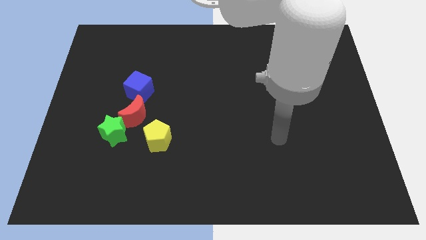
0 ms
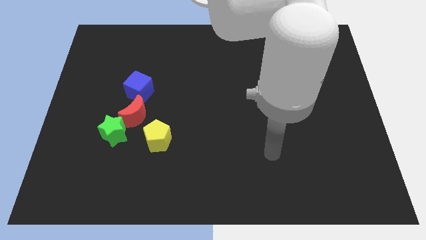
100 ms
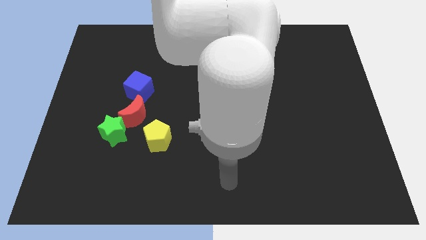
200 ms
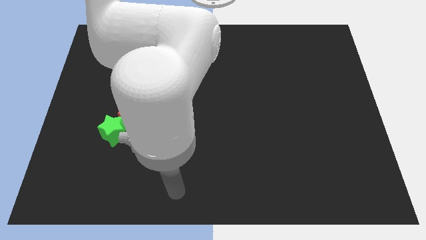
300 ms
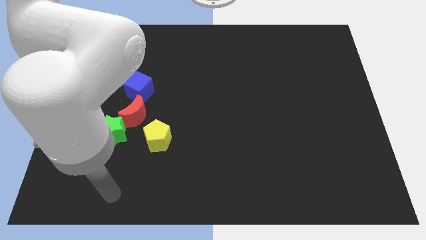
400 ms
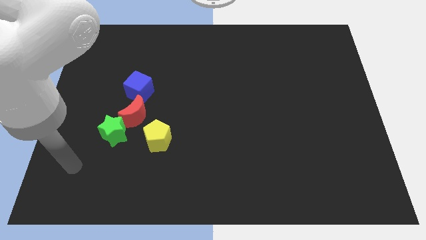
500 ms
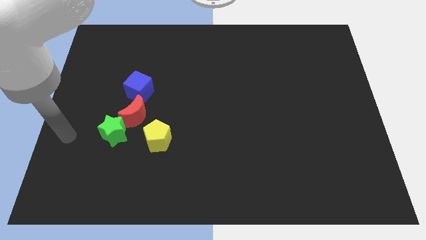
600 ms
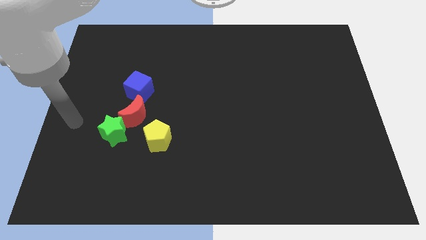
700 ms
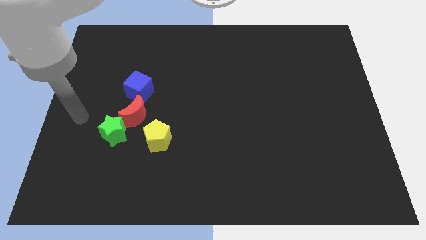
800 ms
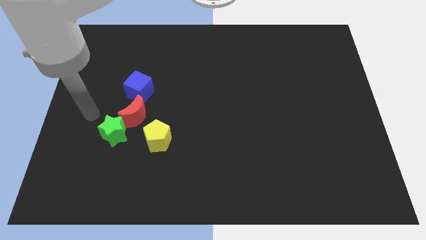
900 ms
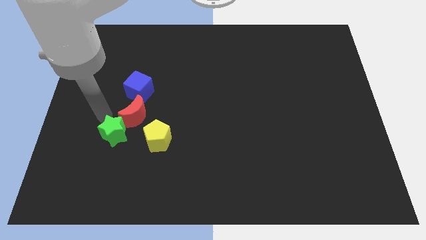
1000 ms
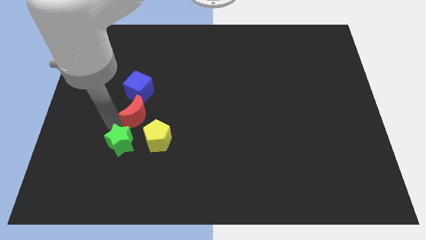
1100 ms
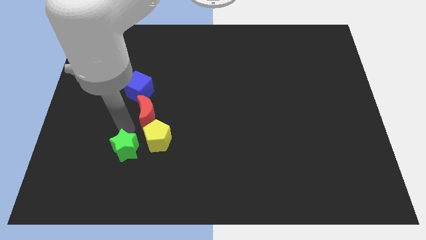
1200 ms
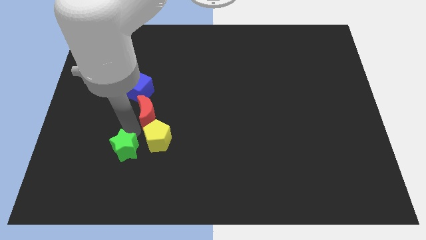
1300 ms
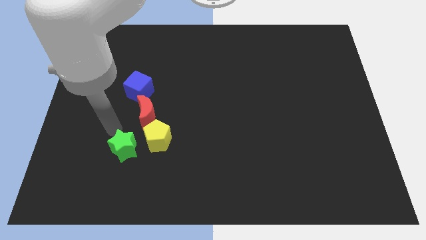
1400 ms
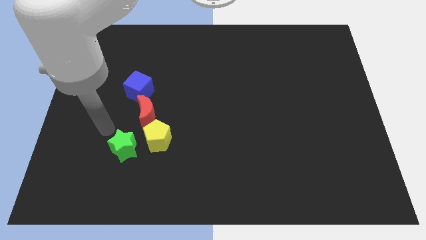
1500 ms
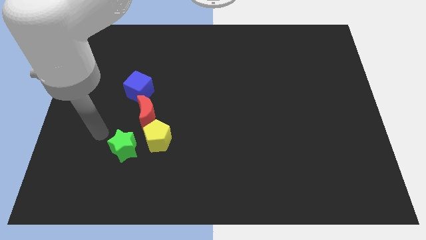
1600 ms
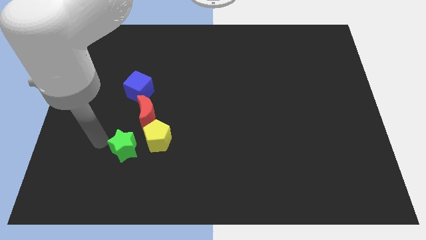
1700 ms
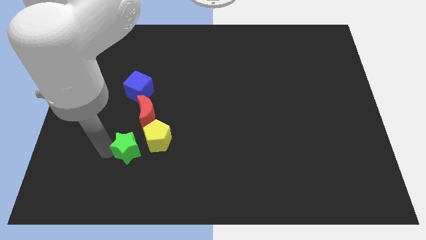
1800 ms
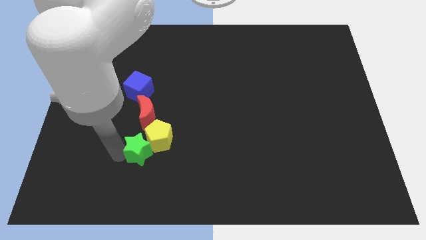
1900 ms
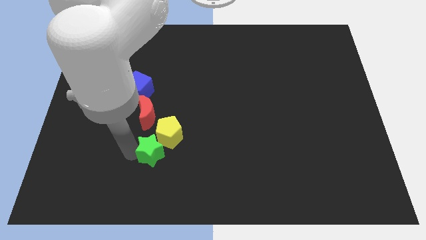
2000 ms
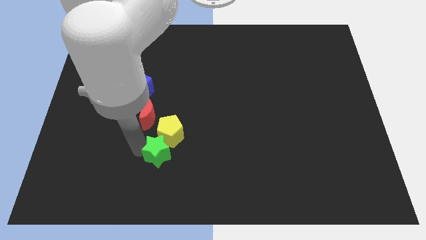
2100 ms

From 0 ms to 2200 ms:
move the green star to the yellow block

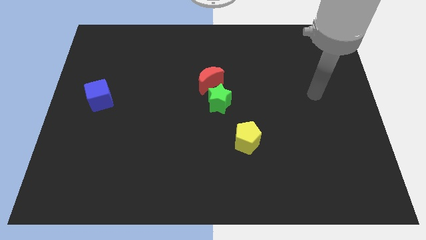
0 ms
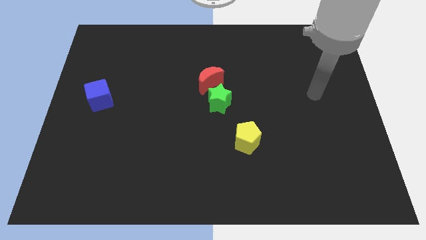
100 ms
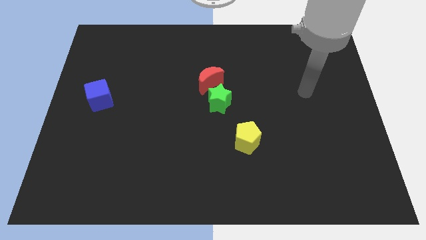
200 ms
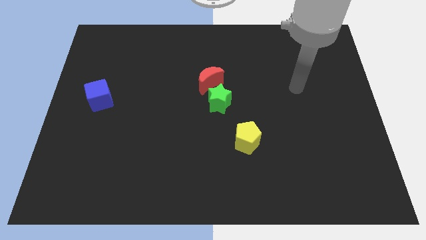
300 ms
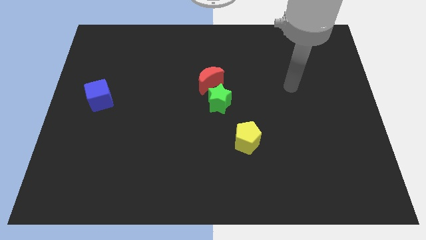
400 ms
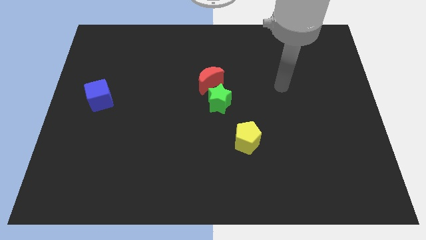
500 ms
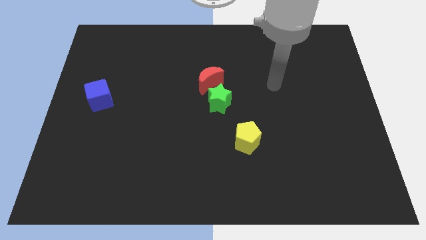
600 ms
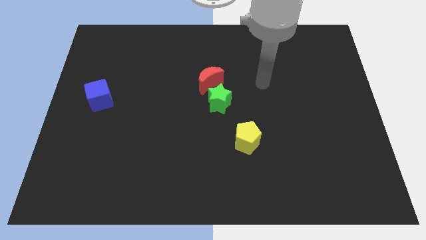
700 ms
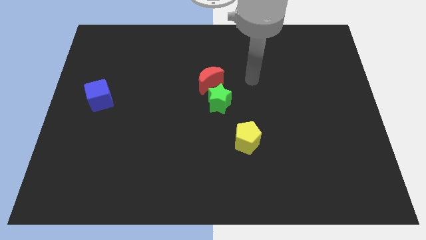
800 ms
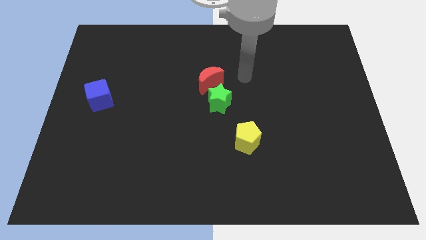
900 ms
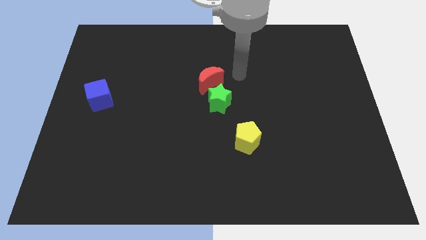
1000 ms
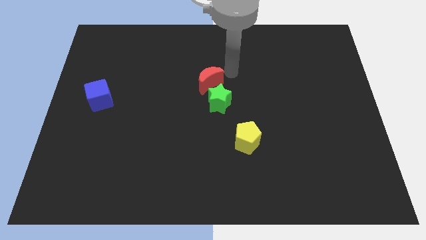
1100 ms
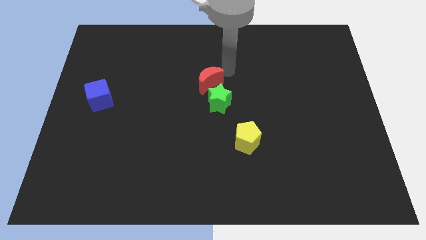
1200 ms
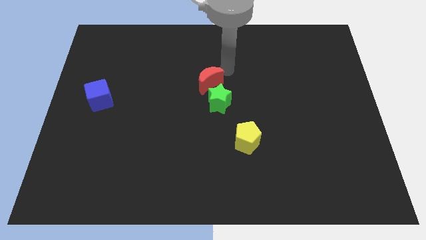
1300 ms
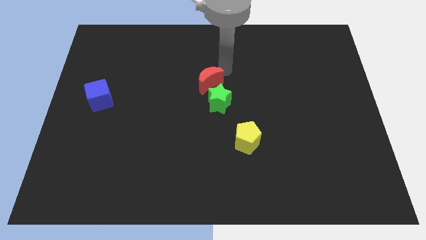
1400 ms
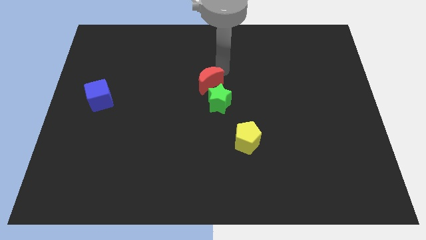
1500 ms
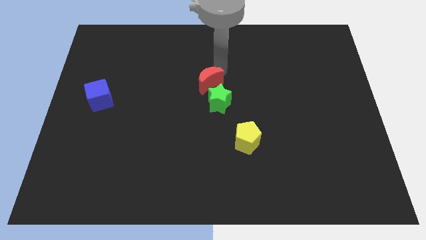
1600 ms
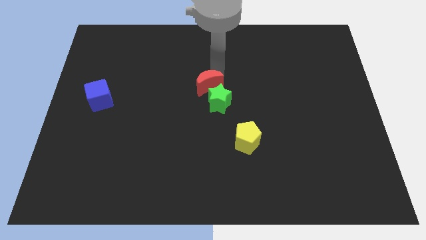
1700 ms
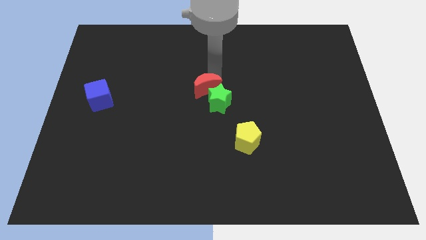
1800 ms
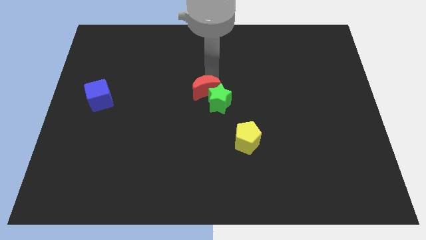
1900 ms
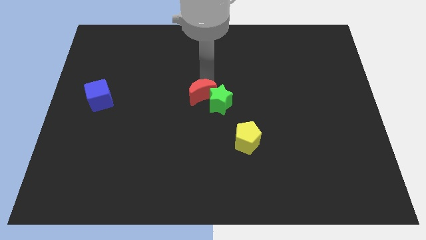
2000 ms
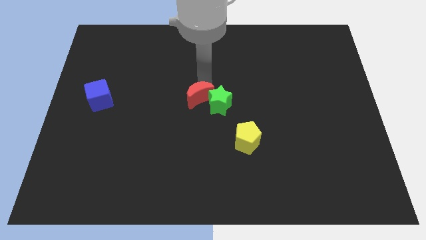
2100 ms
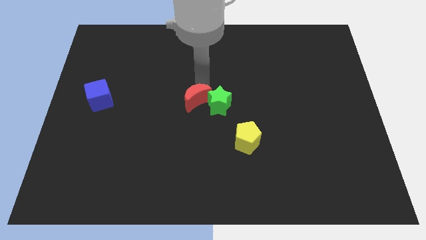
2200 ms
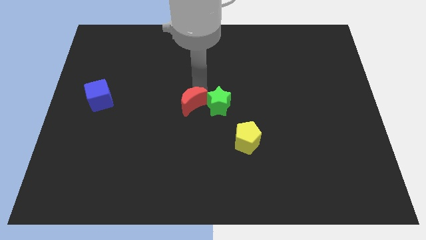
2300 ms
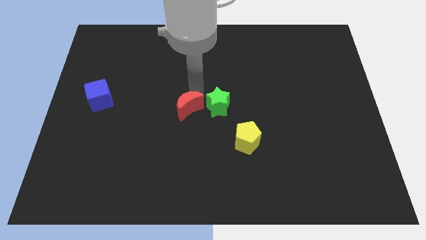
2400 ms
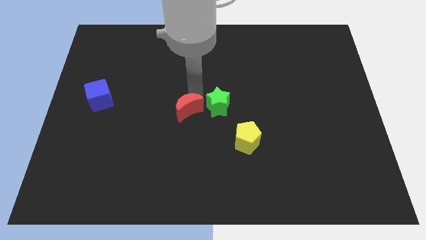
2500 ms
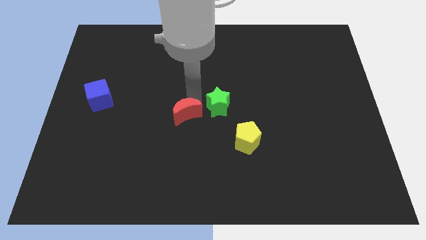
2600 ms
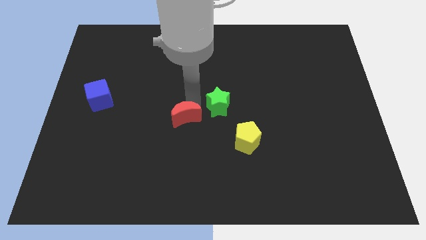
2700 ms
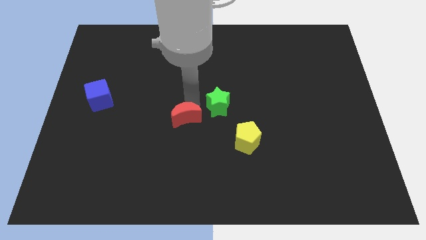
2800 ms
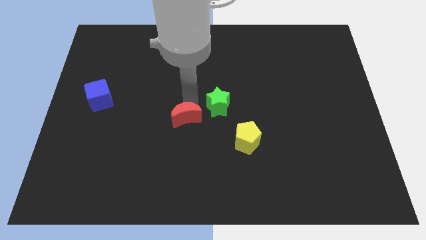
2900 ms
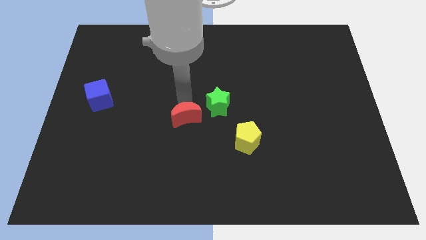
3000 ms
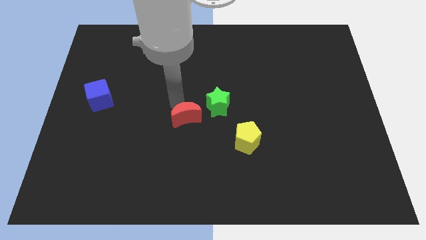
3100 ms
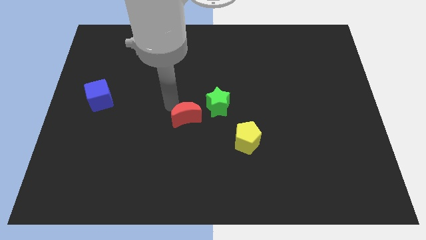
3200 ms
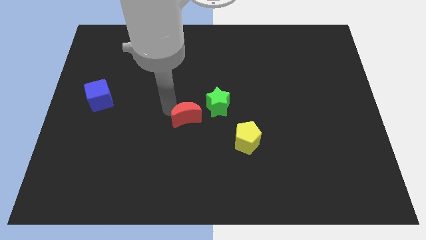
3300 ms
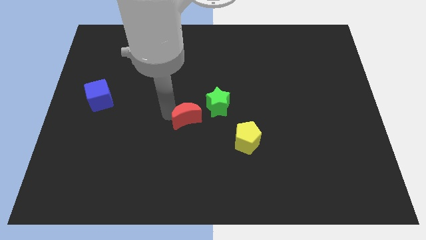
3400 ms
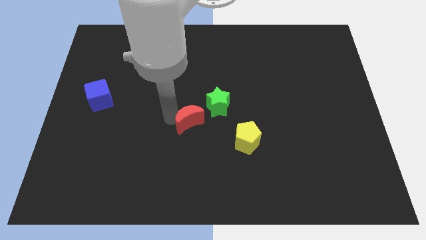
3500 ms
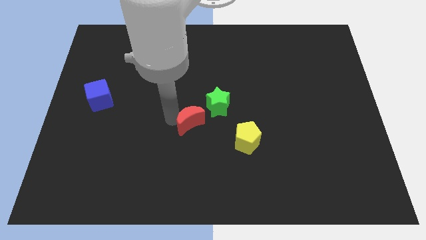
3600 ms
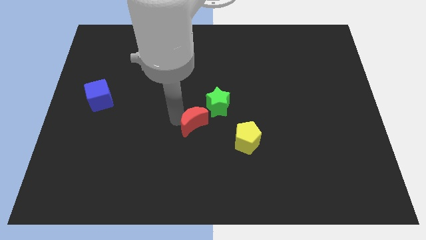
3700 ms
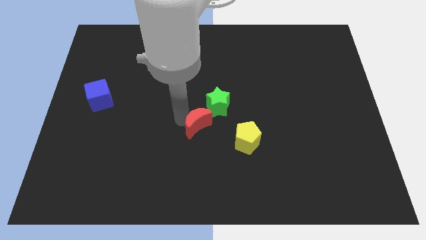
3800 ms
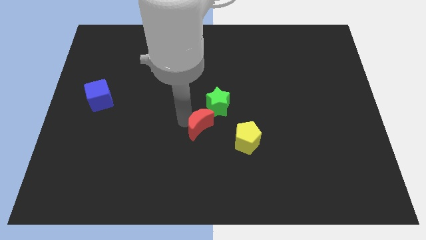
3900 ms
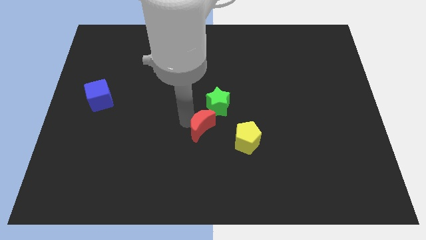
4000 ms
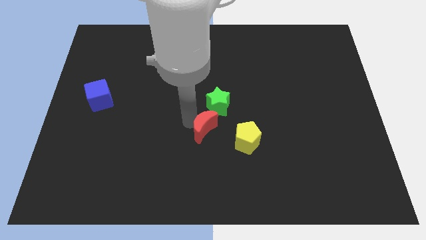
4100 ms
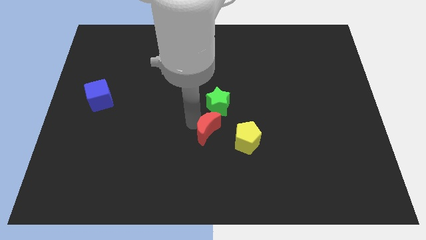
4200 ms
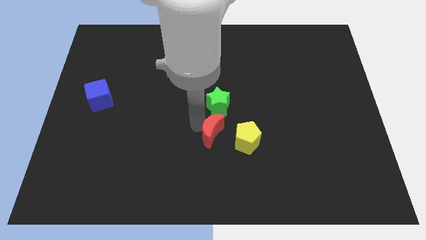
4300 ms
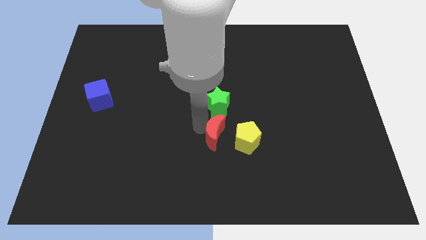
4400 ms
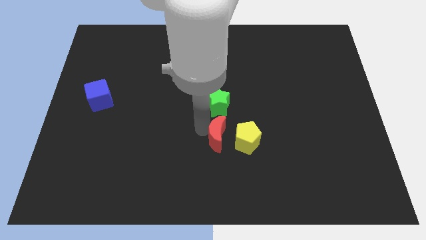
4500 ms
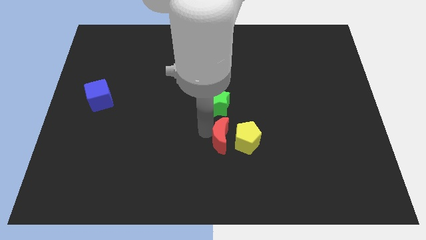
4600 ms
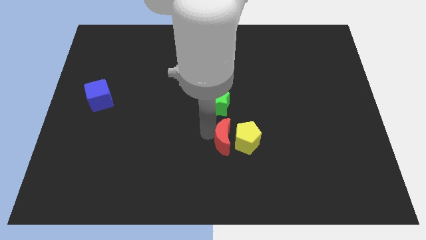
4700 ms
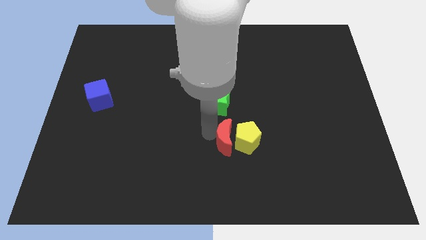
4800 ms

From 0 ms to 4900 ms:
put the red block to the yellow block

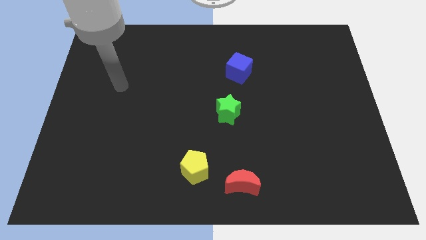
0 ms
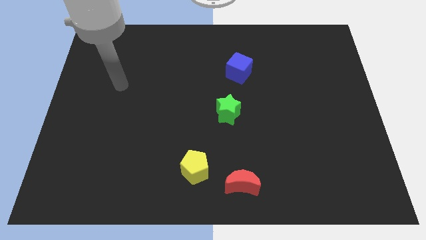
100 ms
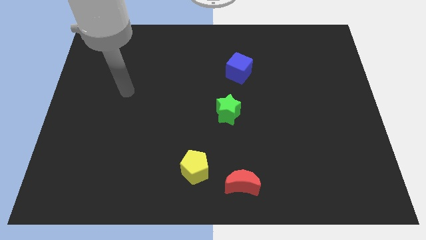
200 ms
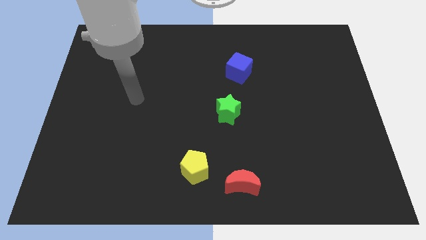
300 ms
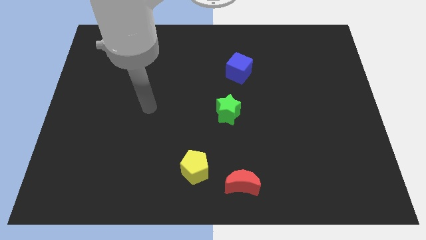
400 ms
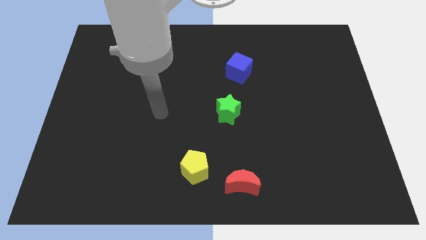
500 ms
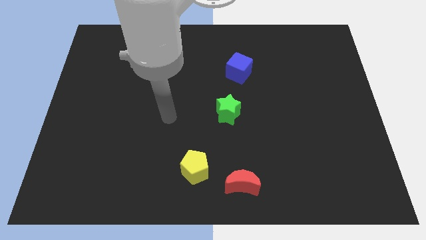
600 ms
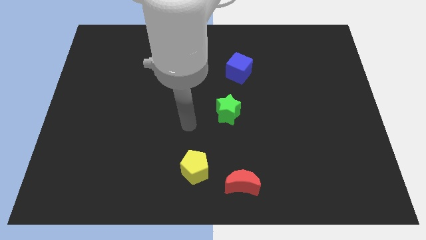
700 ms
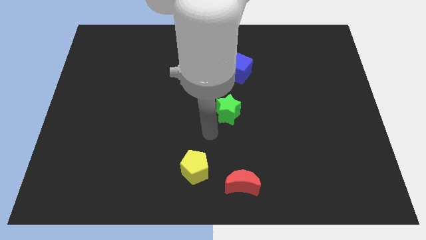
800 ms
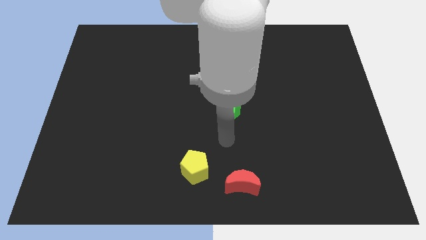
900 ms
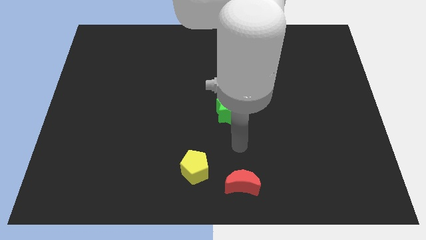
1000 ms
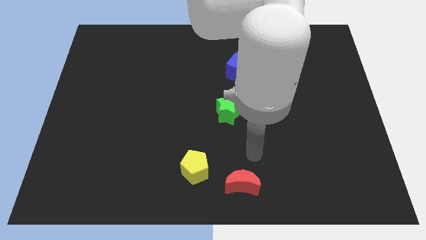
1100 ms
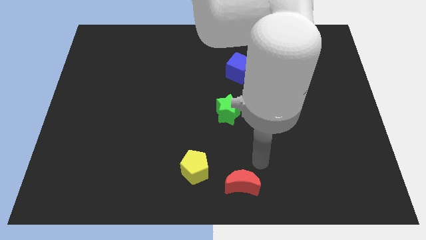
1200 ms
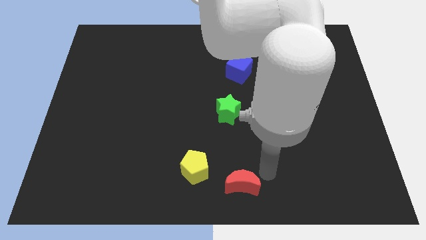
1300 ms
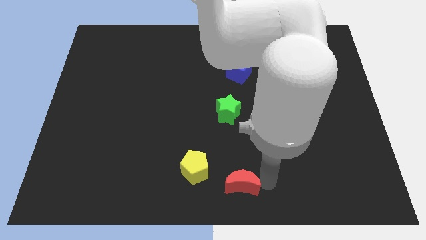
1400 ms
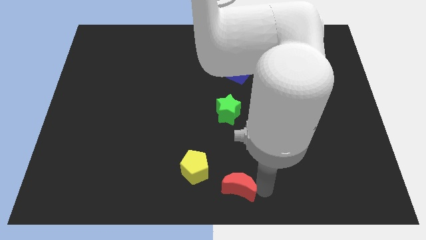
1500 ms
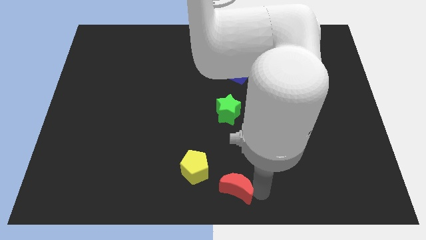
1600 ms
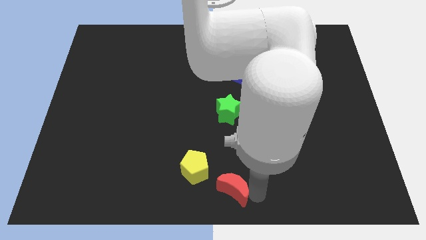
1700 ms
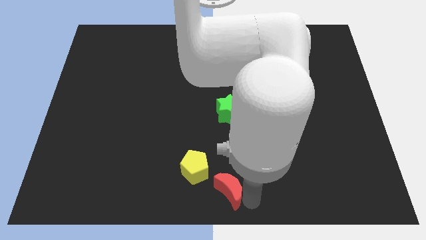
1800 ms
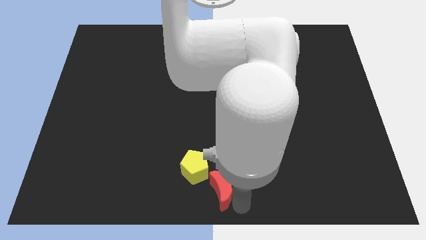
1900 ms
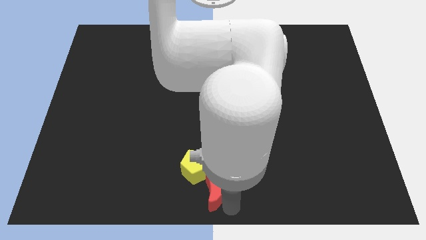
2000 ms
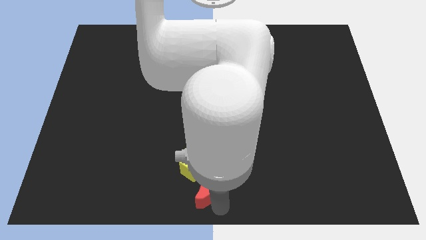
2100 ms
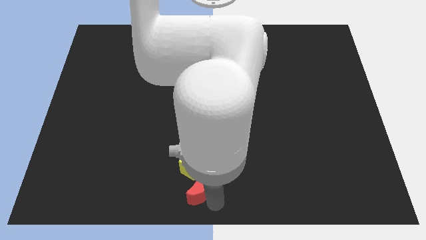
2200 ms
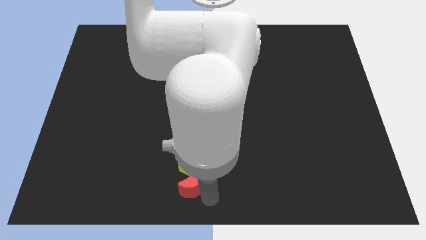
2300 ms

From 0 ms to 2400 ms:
move the red block to the yellow block
